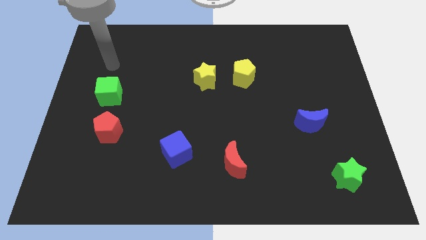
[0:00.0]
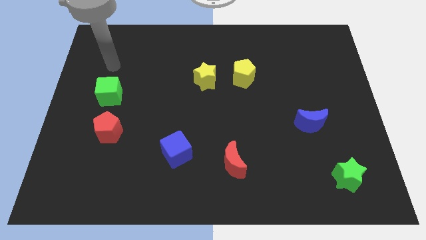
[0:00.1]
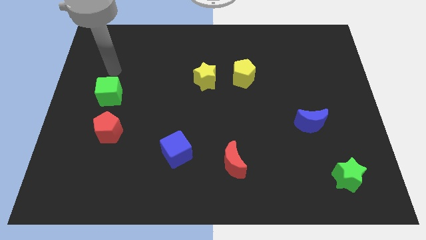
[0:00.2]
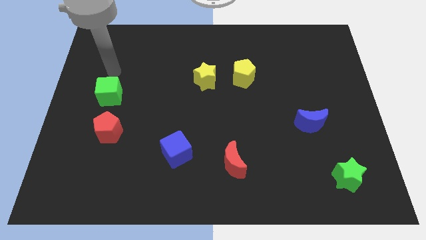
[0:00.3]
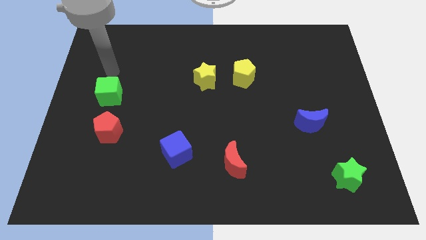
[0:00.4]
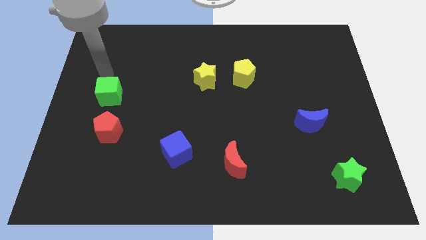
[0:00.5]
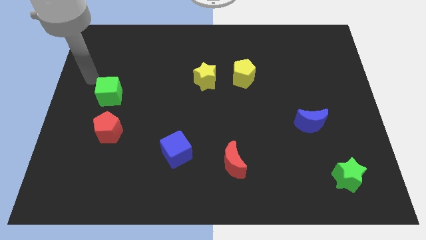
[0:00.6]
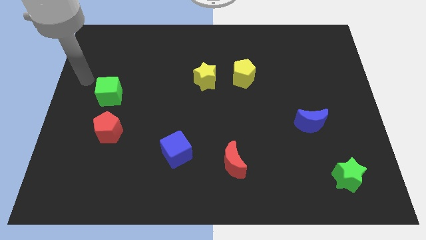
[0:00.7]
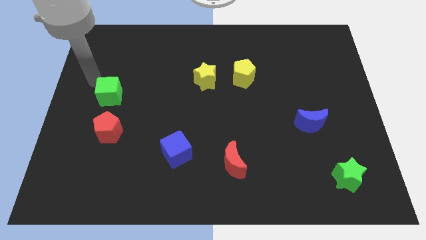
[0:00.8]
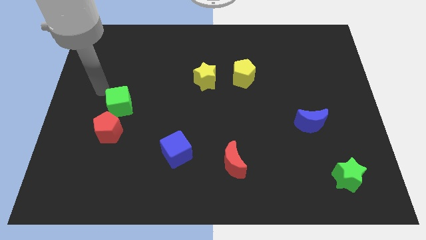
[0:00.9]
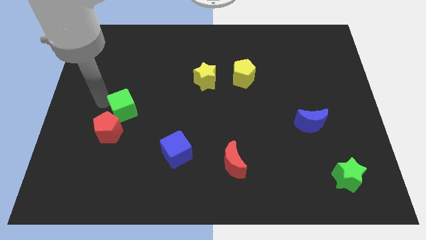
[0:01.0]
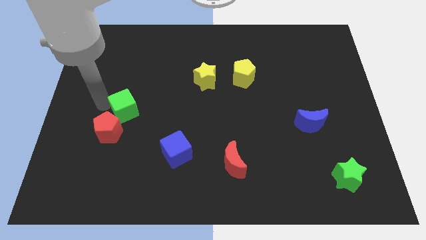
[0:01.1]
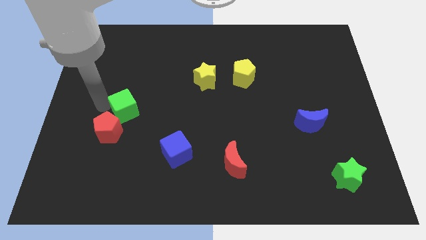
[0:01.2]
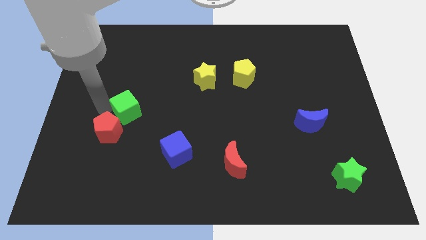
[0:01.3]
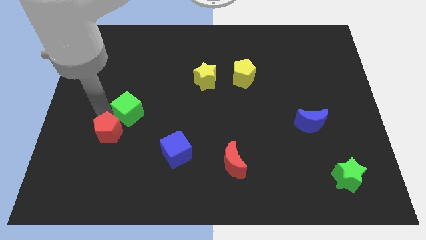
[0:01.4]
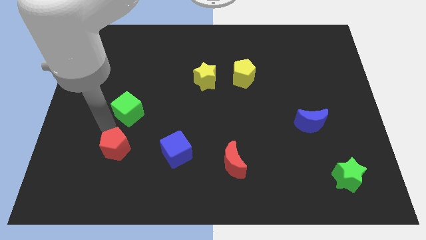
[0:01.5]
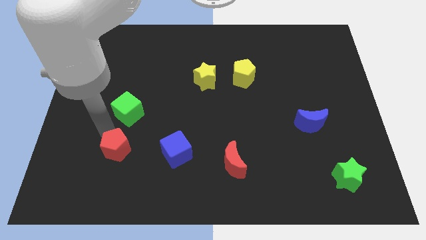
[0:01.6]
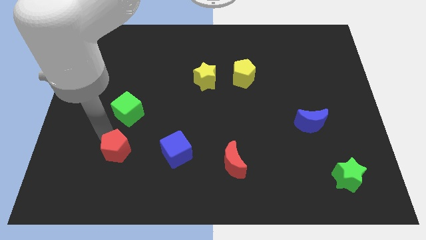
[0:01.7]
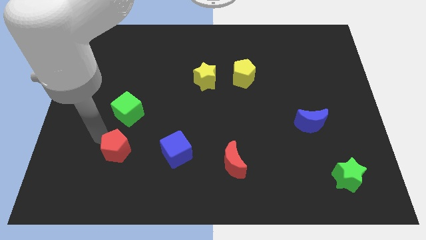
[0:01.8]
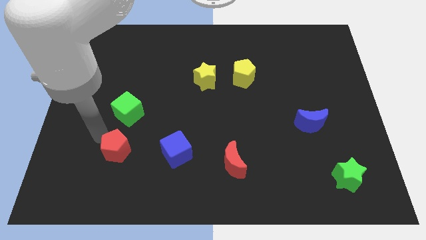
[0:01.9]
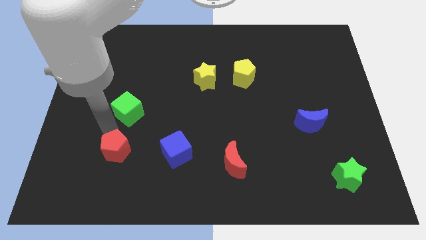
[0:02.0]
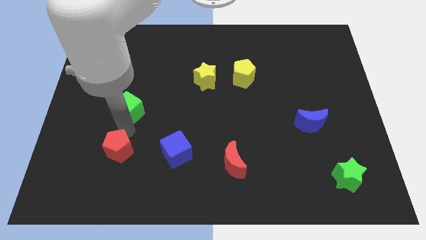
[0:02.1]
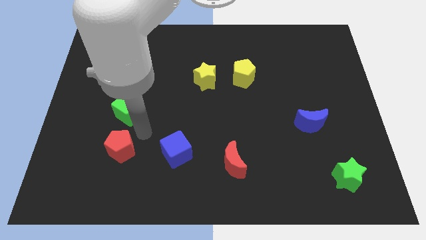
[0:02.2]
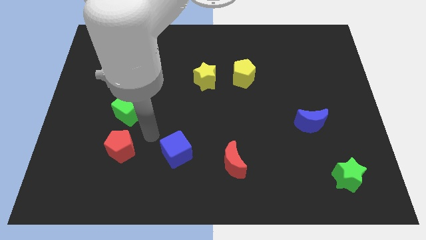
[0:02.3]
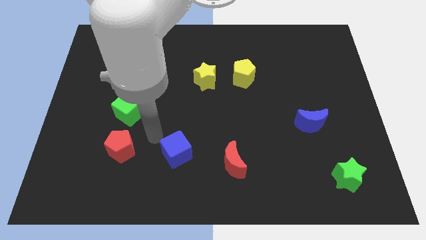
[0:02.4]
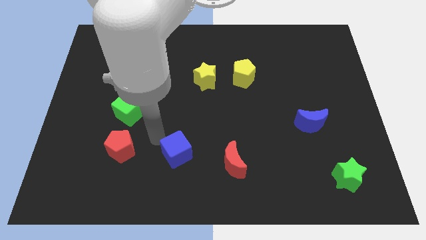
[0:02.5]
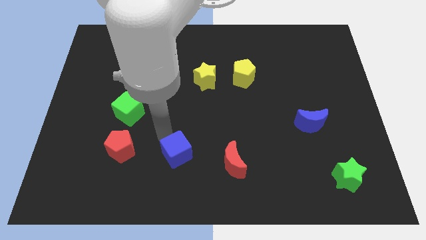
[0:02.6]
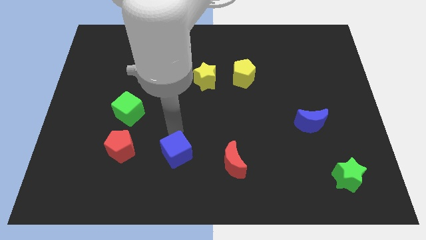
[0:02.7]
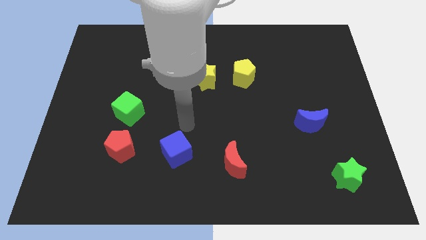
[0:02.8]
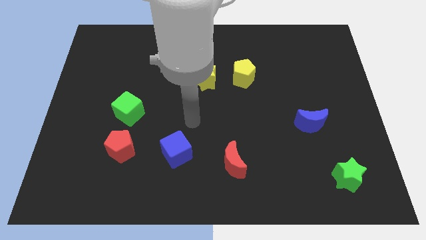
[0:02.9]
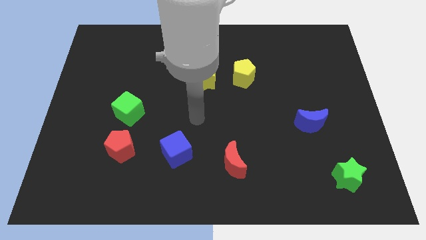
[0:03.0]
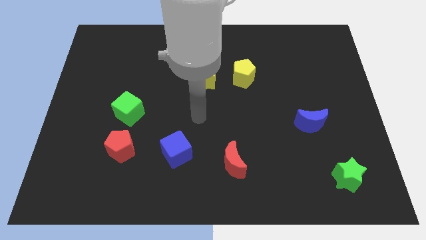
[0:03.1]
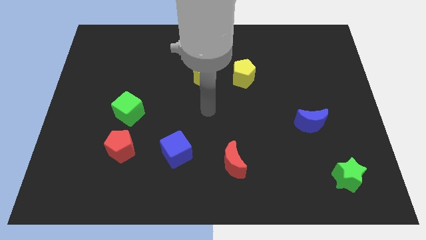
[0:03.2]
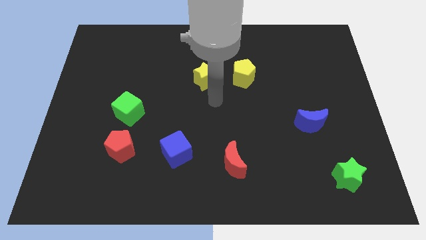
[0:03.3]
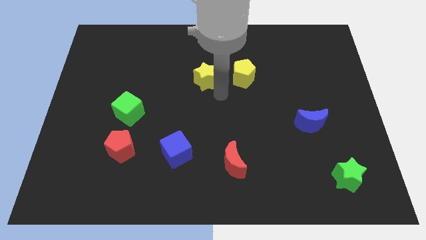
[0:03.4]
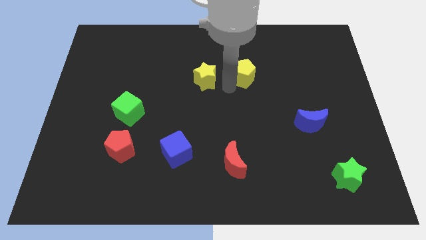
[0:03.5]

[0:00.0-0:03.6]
push the green cube and red pentagon slightly down

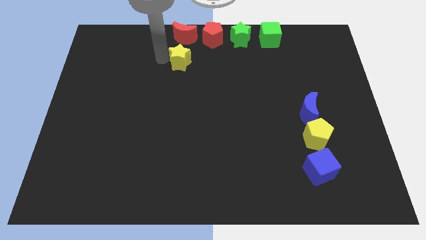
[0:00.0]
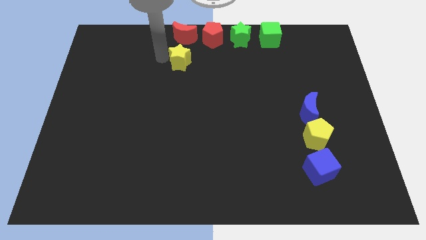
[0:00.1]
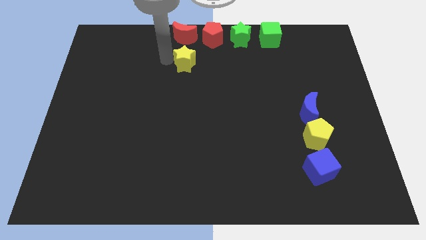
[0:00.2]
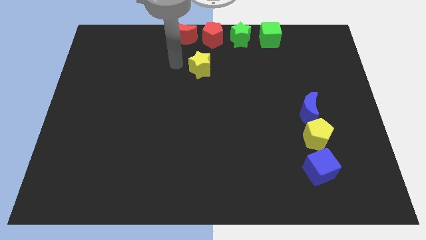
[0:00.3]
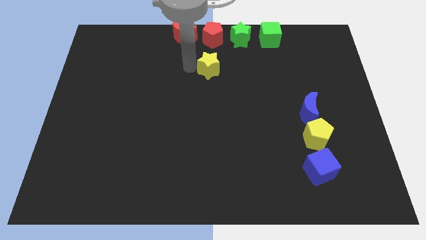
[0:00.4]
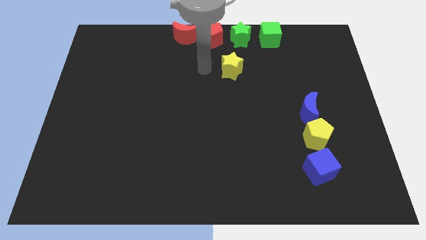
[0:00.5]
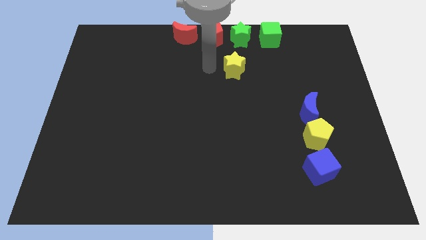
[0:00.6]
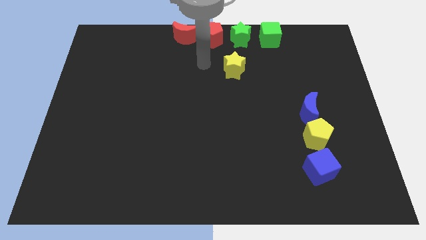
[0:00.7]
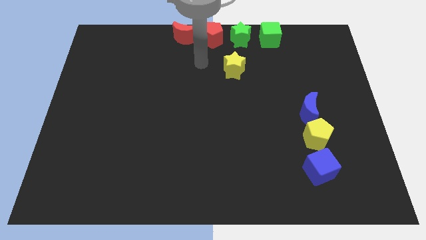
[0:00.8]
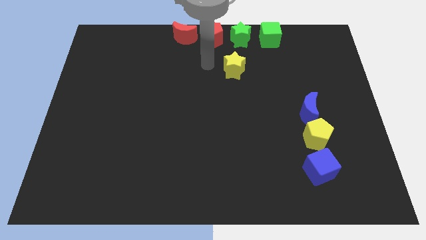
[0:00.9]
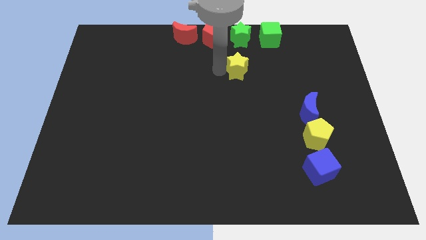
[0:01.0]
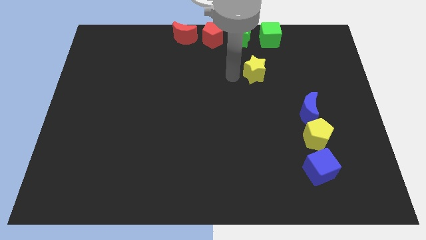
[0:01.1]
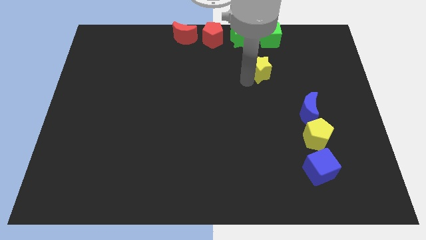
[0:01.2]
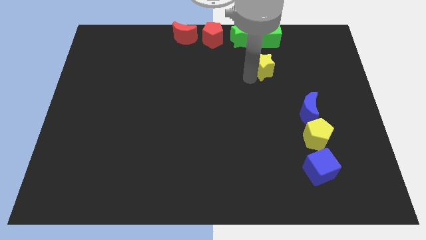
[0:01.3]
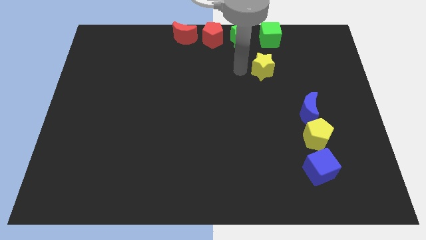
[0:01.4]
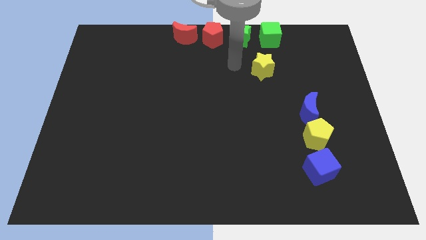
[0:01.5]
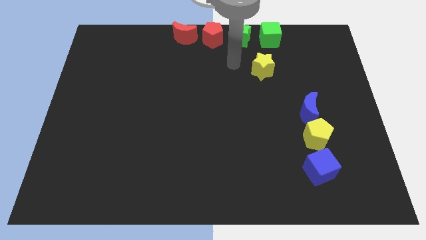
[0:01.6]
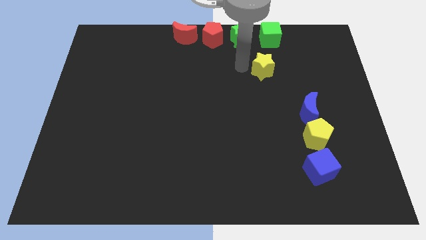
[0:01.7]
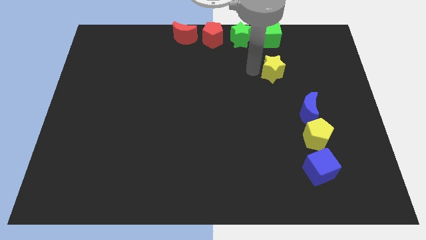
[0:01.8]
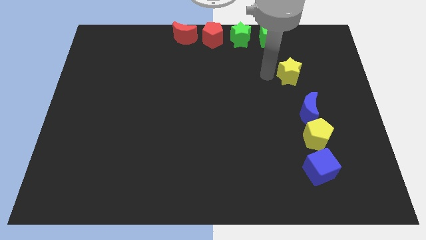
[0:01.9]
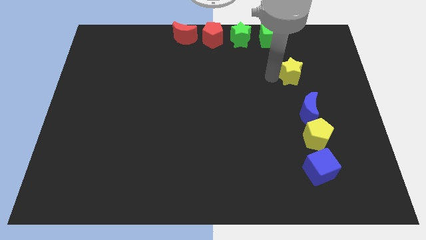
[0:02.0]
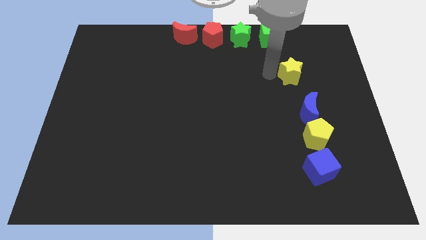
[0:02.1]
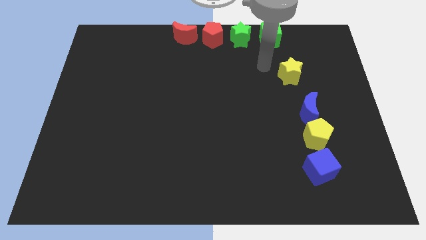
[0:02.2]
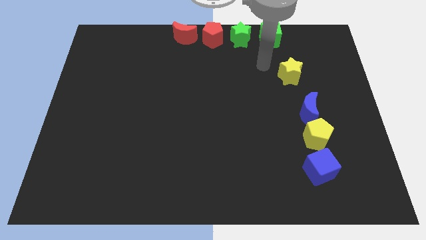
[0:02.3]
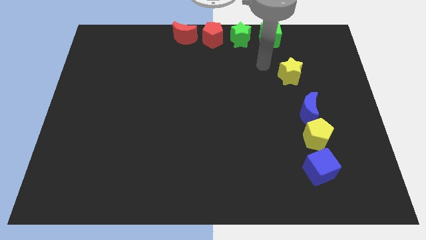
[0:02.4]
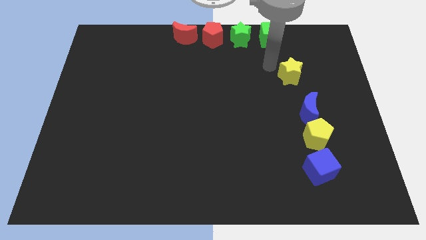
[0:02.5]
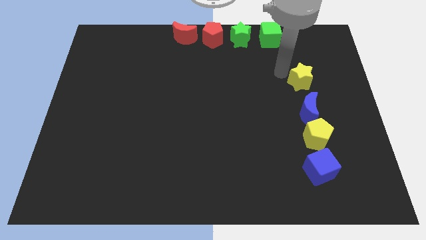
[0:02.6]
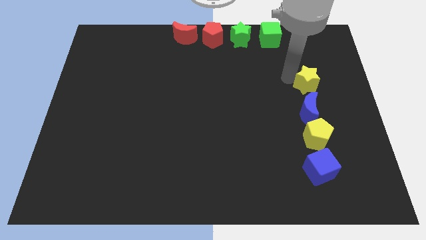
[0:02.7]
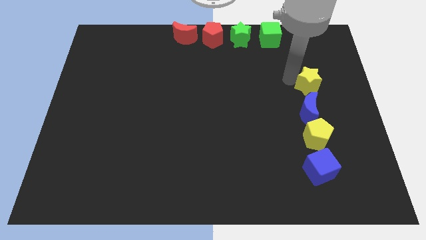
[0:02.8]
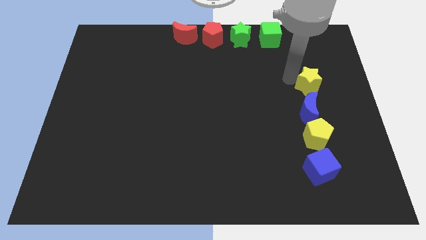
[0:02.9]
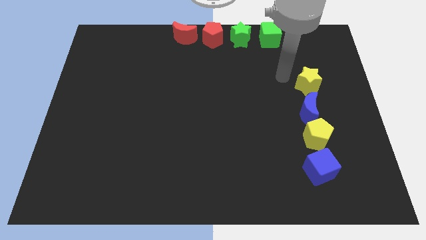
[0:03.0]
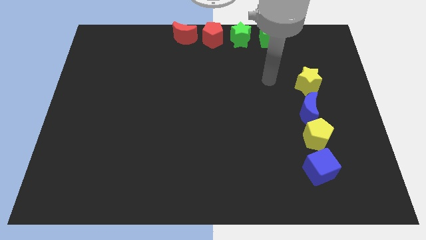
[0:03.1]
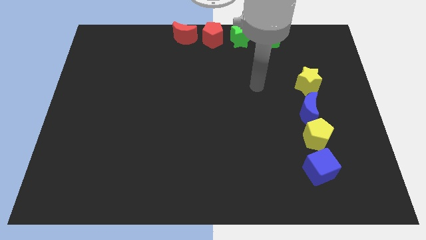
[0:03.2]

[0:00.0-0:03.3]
place yellow star above blue moon

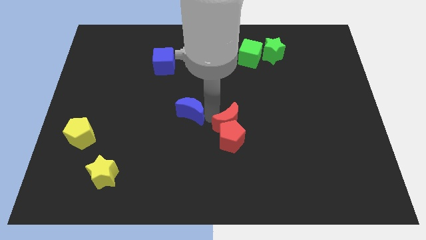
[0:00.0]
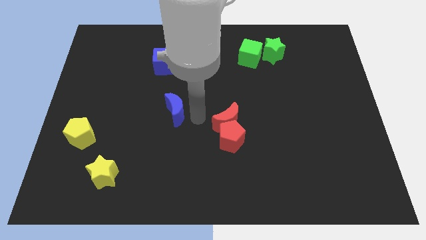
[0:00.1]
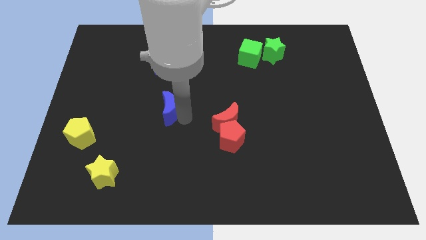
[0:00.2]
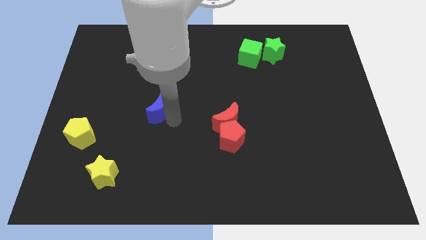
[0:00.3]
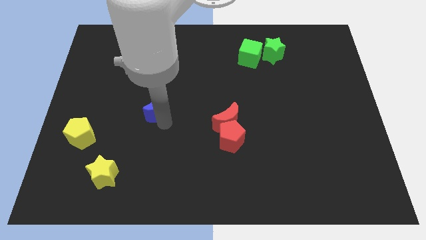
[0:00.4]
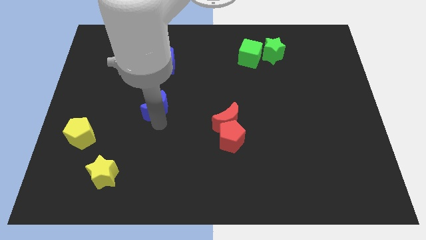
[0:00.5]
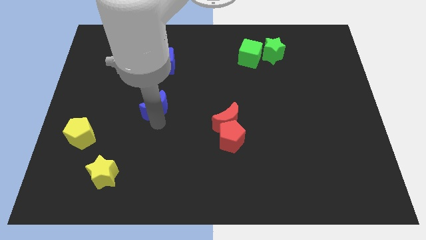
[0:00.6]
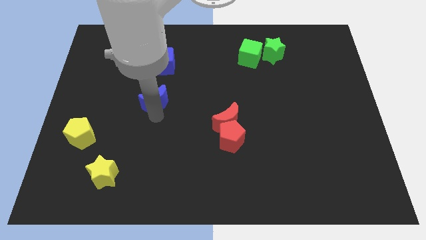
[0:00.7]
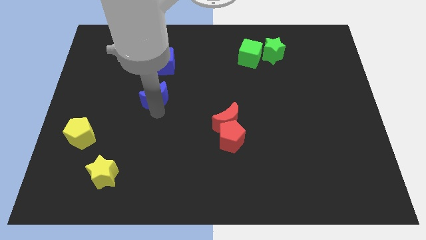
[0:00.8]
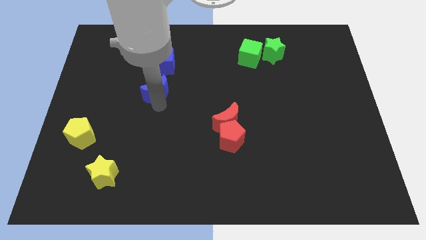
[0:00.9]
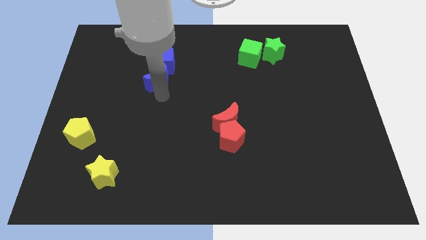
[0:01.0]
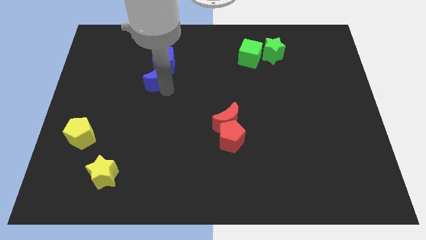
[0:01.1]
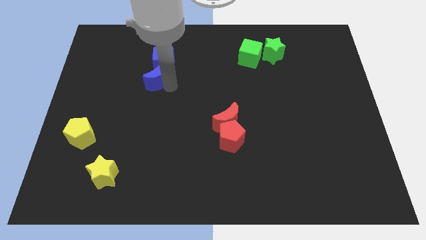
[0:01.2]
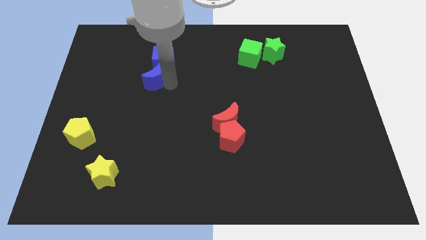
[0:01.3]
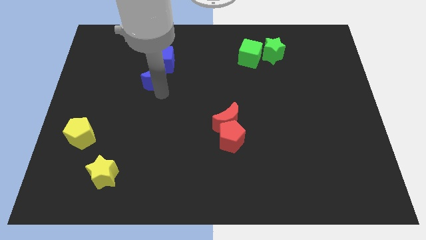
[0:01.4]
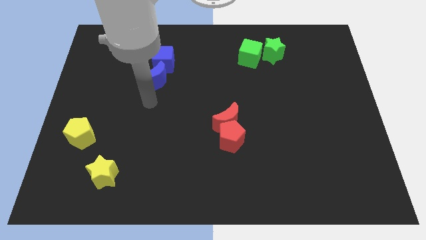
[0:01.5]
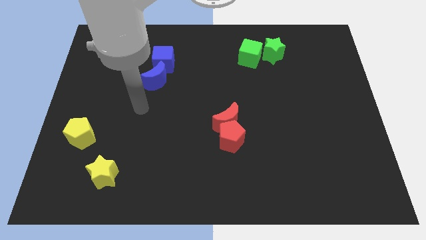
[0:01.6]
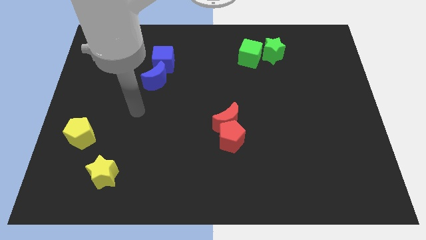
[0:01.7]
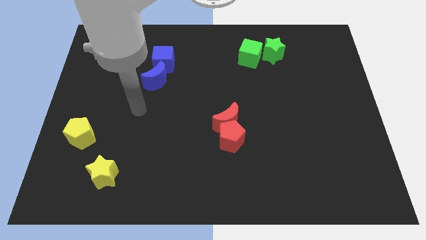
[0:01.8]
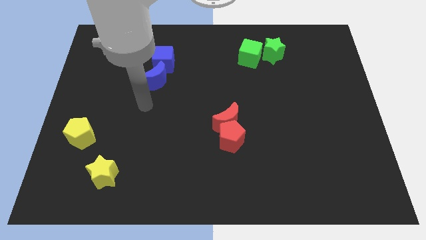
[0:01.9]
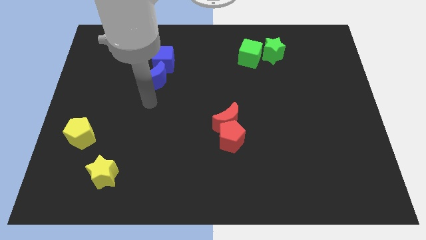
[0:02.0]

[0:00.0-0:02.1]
push blue moon into blue cube
